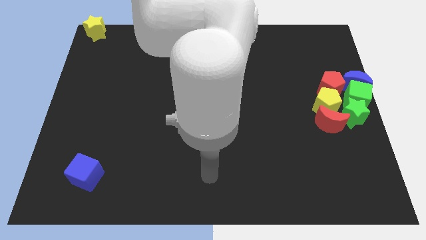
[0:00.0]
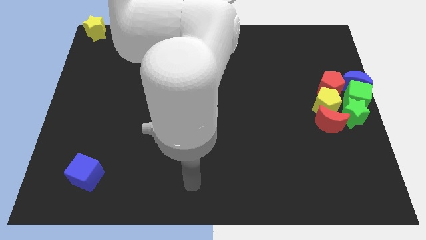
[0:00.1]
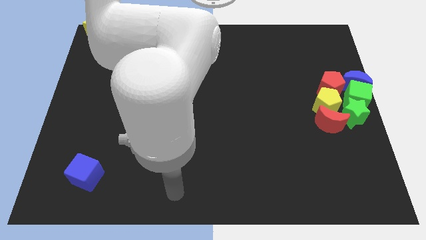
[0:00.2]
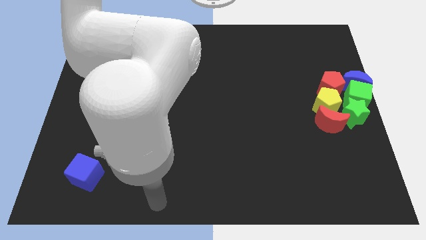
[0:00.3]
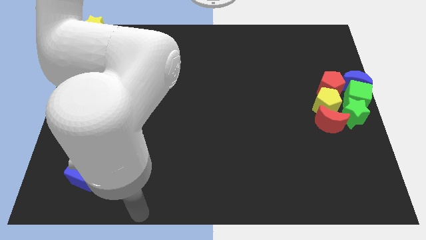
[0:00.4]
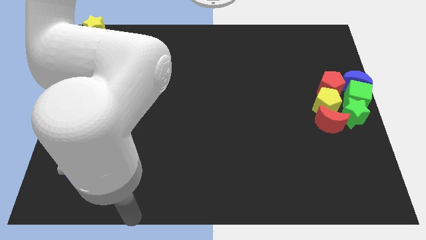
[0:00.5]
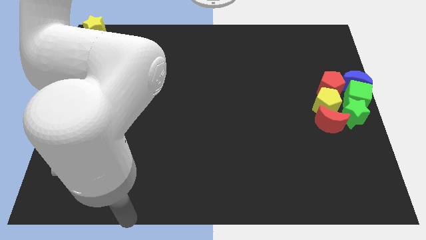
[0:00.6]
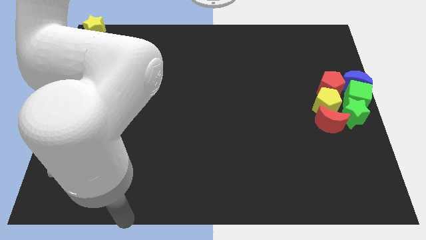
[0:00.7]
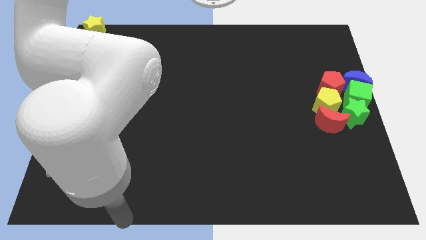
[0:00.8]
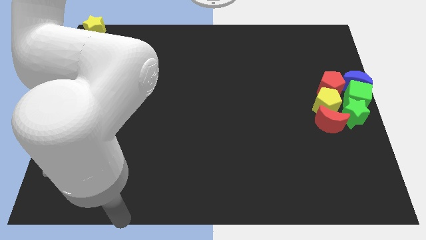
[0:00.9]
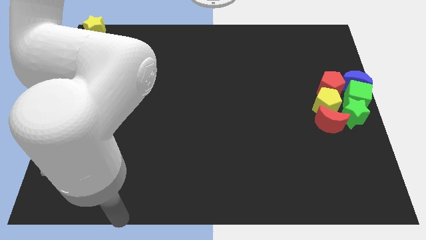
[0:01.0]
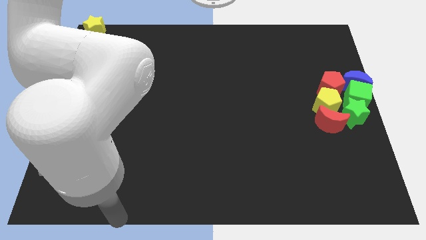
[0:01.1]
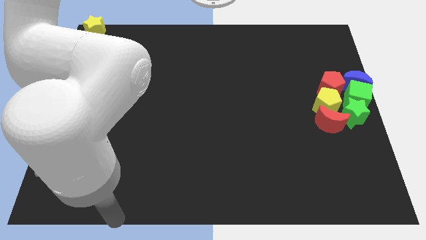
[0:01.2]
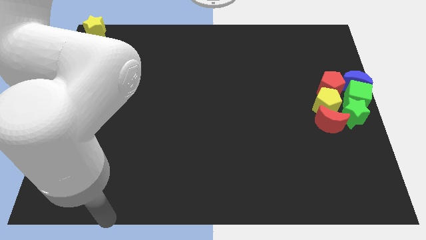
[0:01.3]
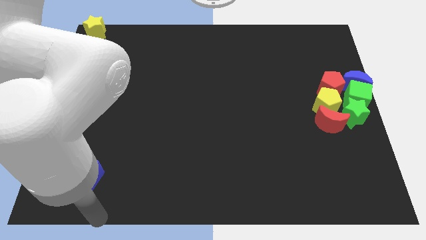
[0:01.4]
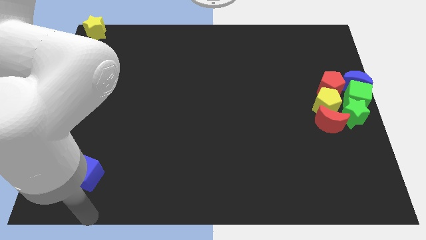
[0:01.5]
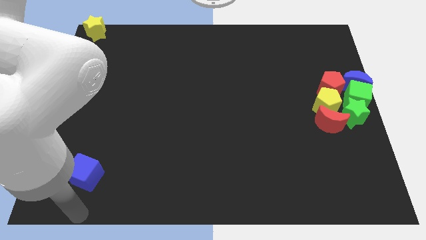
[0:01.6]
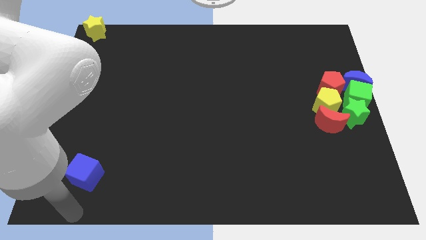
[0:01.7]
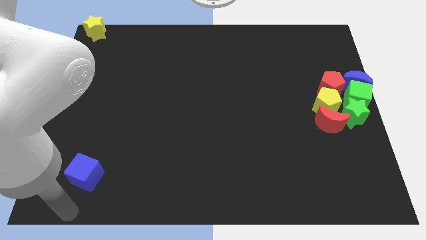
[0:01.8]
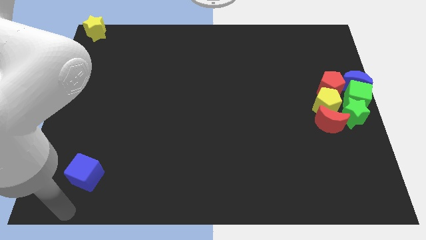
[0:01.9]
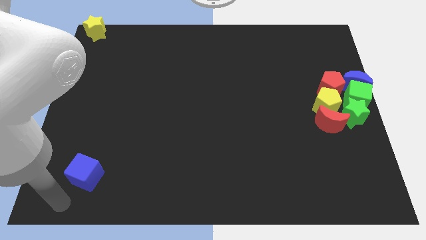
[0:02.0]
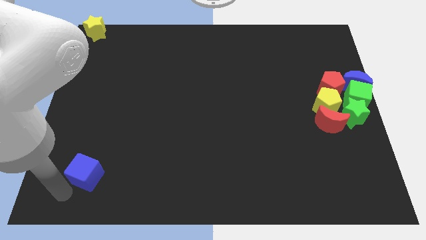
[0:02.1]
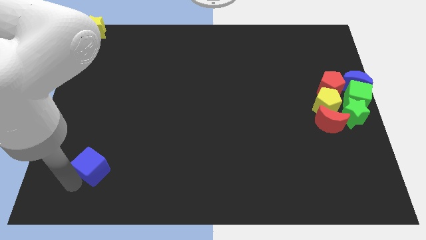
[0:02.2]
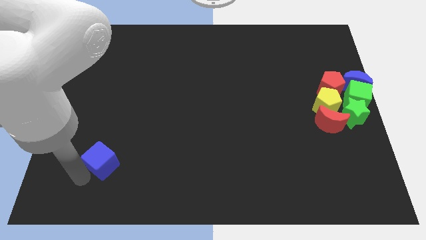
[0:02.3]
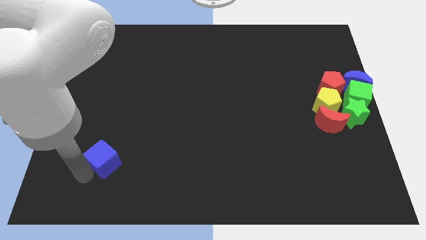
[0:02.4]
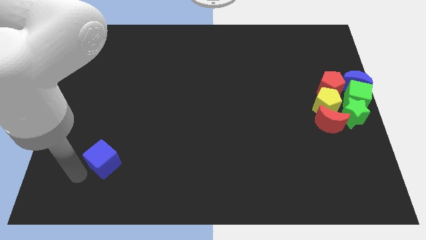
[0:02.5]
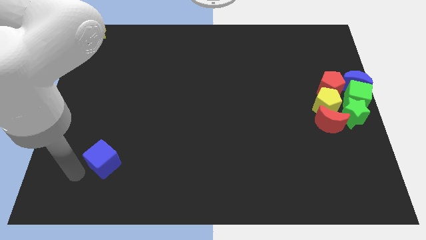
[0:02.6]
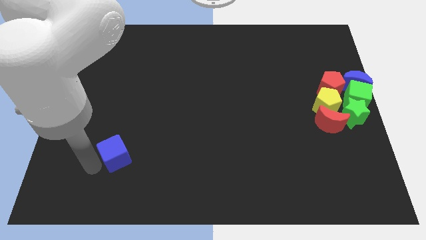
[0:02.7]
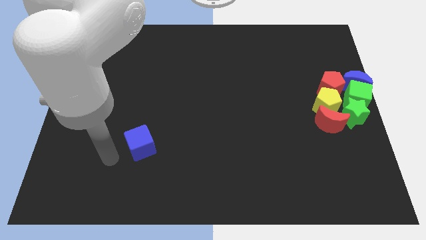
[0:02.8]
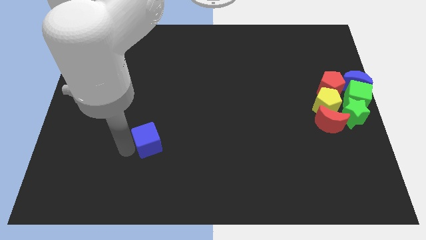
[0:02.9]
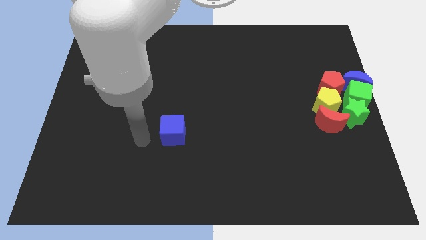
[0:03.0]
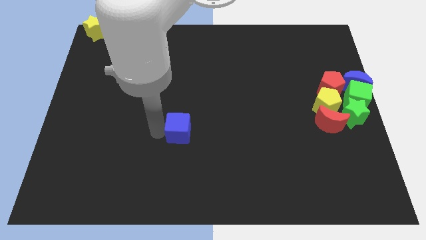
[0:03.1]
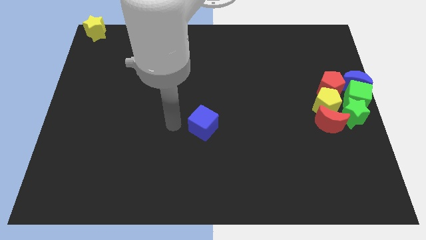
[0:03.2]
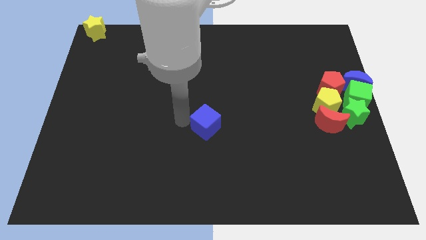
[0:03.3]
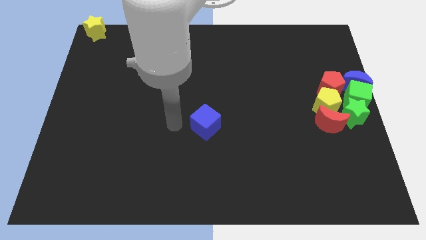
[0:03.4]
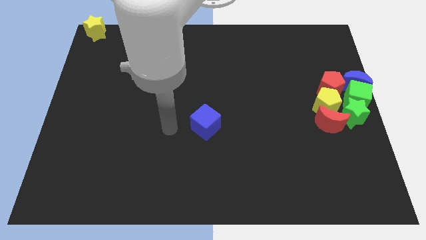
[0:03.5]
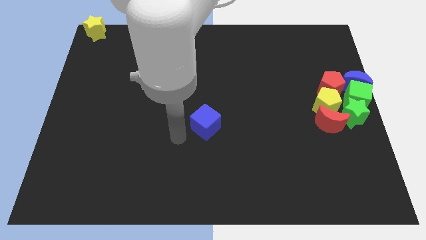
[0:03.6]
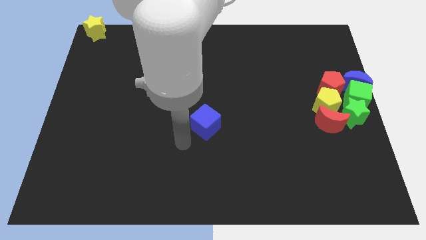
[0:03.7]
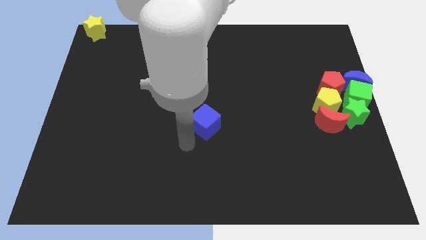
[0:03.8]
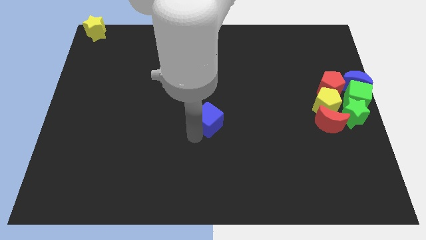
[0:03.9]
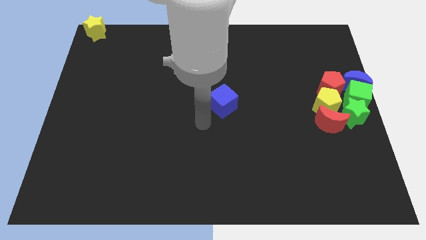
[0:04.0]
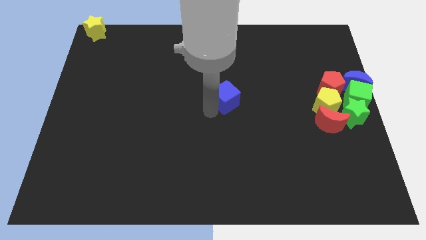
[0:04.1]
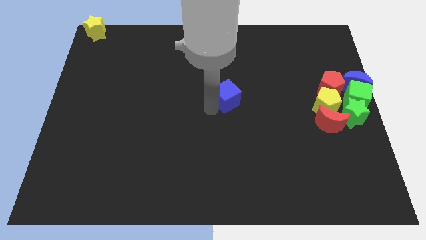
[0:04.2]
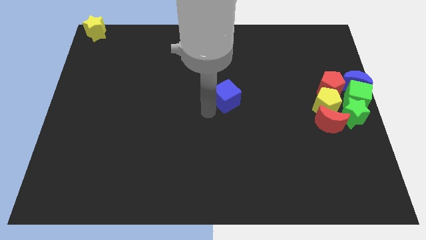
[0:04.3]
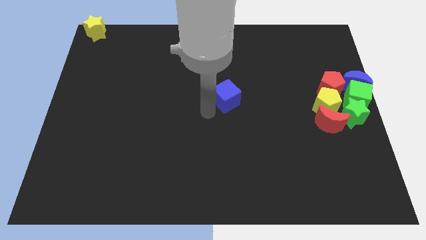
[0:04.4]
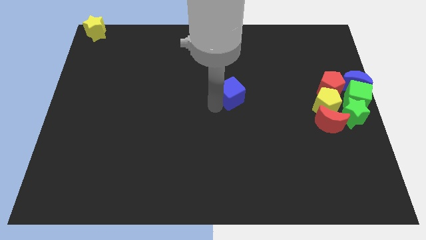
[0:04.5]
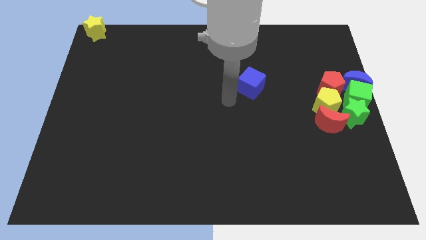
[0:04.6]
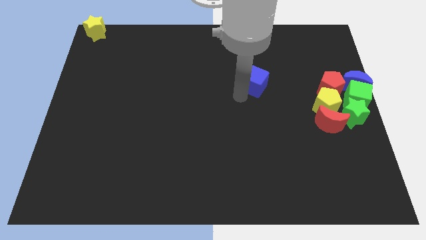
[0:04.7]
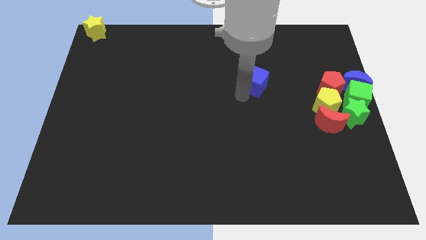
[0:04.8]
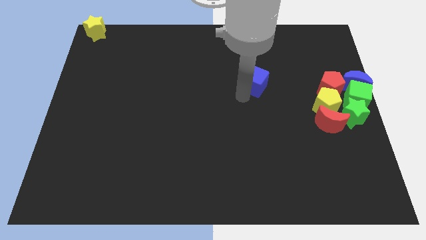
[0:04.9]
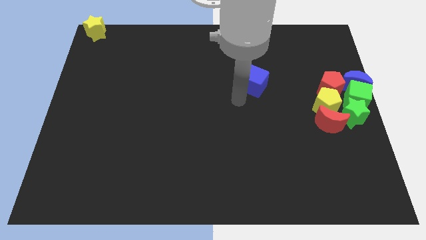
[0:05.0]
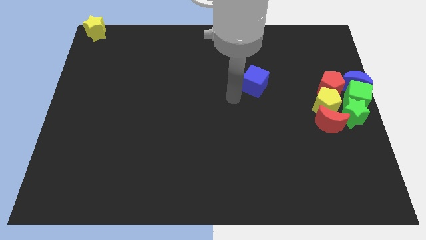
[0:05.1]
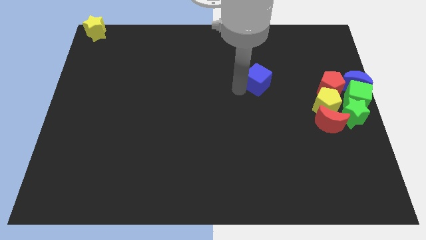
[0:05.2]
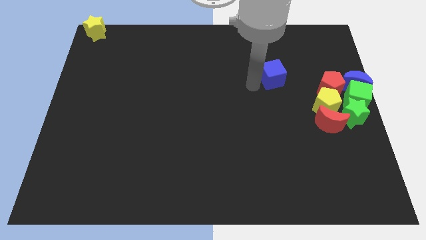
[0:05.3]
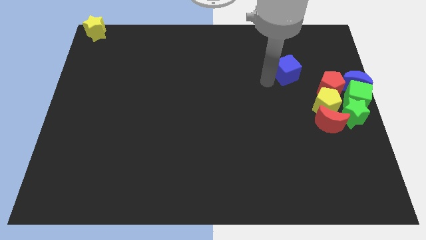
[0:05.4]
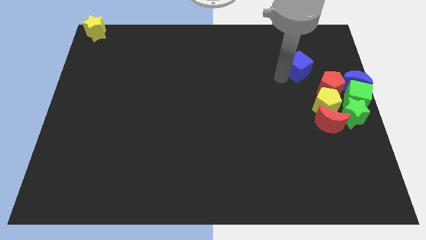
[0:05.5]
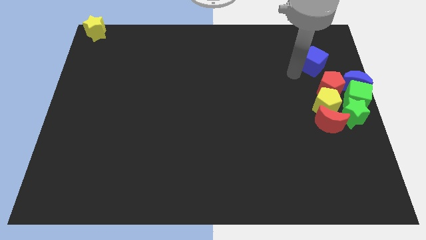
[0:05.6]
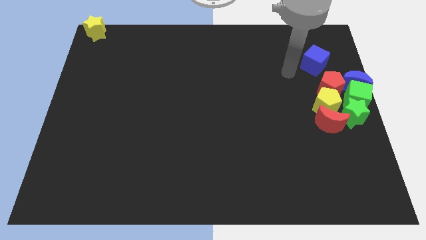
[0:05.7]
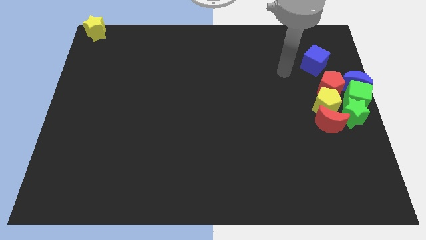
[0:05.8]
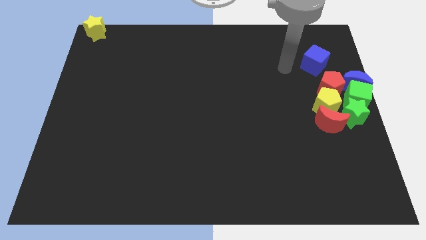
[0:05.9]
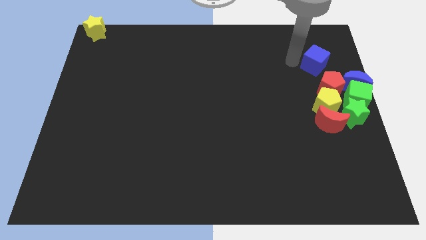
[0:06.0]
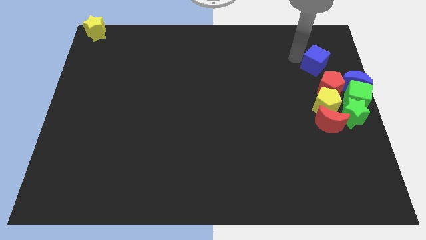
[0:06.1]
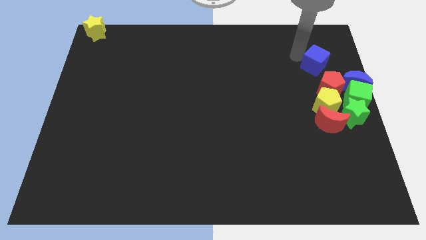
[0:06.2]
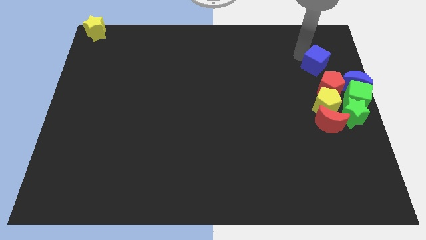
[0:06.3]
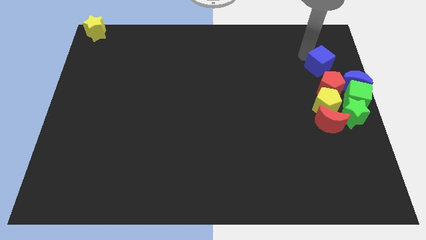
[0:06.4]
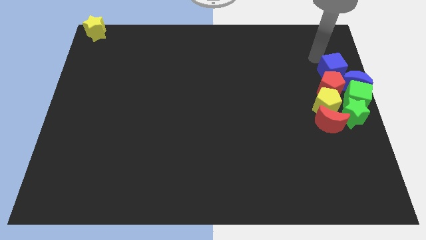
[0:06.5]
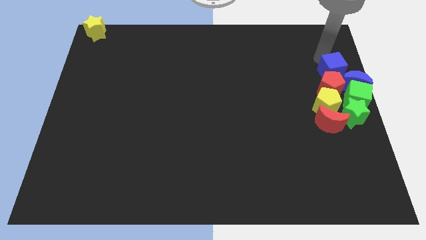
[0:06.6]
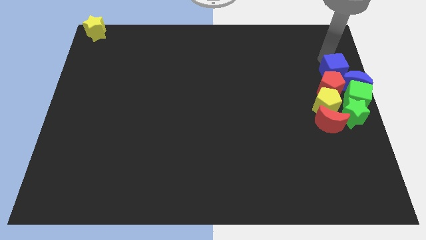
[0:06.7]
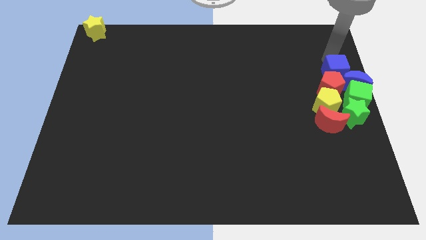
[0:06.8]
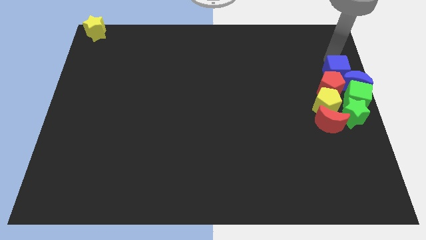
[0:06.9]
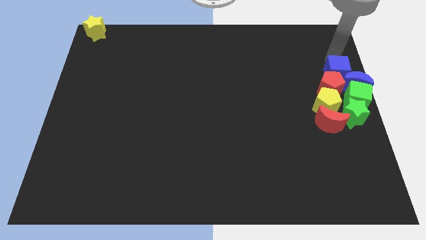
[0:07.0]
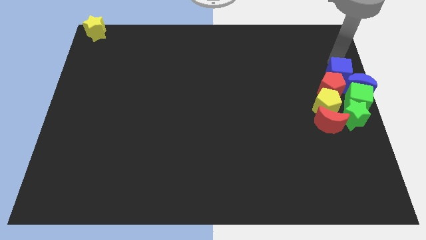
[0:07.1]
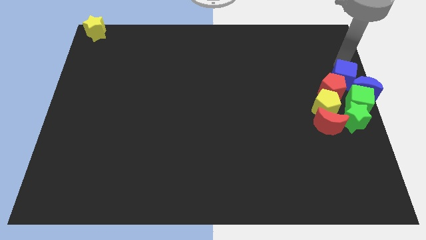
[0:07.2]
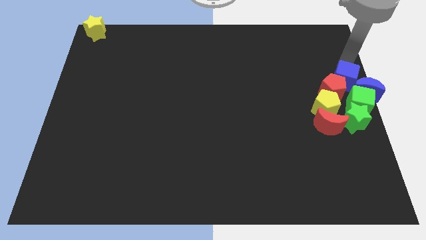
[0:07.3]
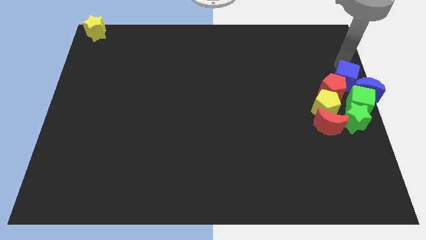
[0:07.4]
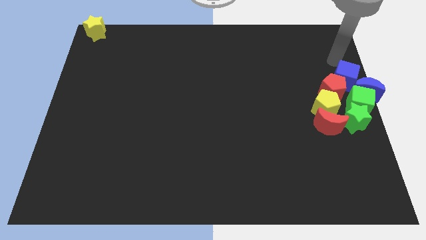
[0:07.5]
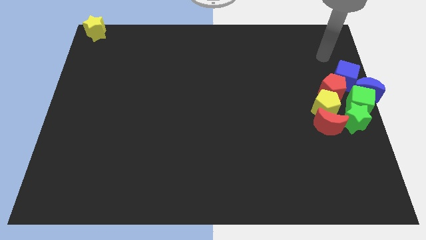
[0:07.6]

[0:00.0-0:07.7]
push the blue cube into the group of blocks at the top of them

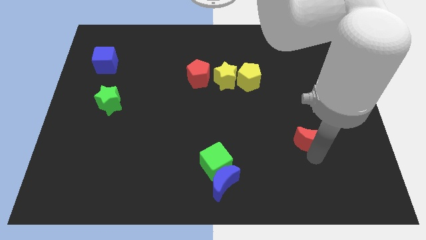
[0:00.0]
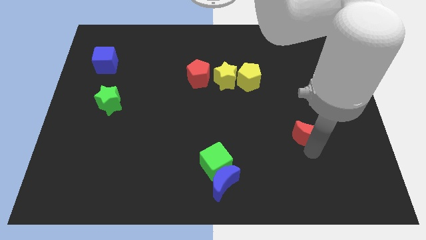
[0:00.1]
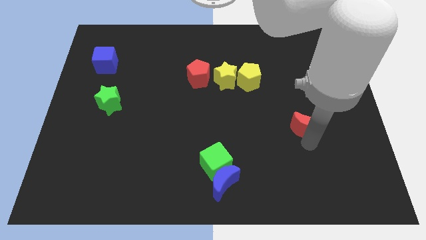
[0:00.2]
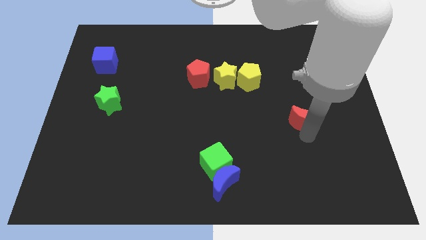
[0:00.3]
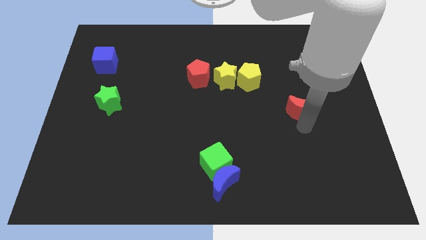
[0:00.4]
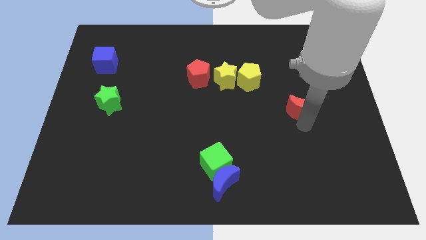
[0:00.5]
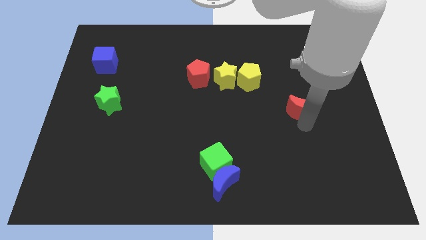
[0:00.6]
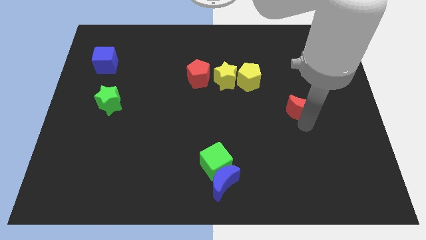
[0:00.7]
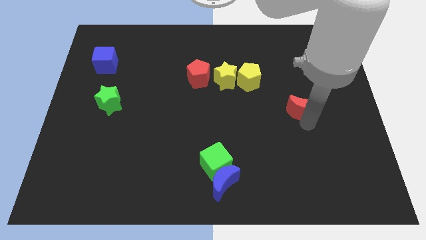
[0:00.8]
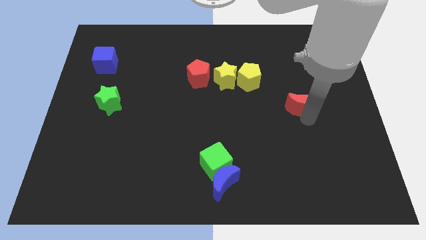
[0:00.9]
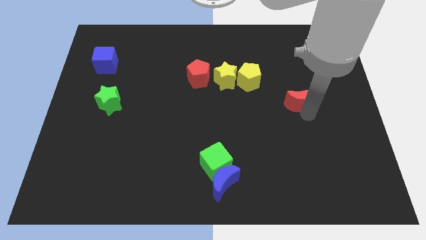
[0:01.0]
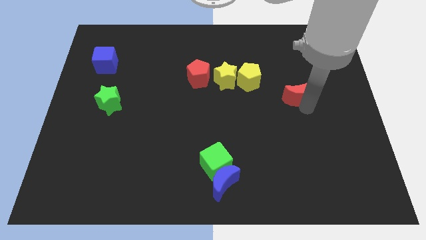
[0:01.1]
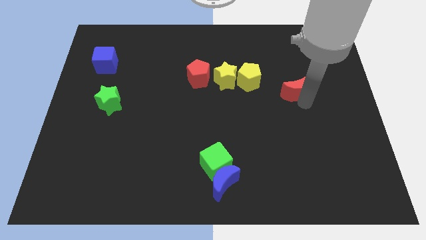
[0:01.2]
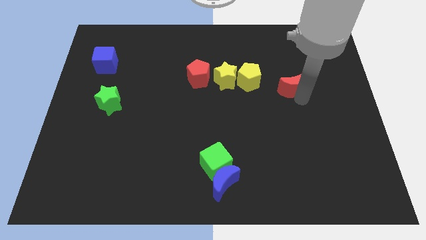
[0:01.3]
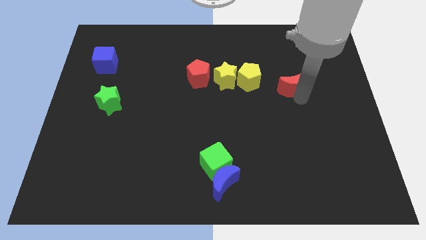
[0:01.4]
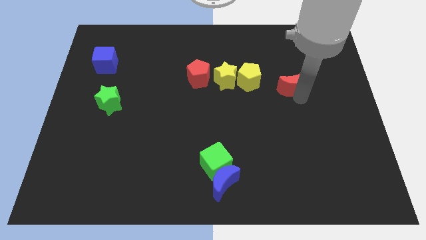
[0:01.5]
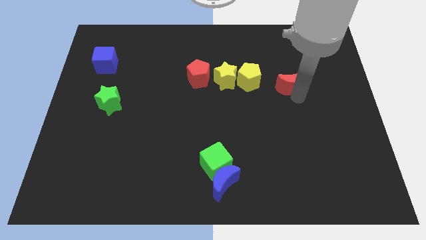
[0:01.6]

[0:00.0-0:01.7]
place the red moon parallel right to the yellow pentagon
